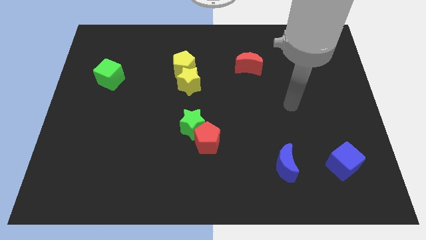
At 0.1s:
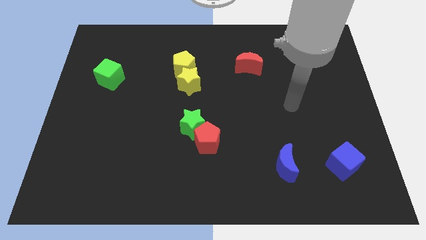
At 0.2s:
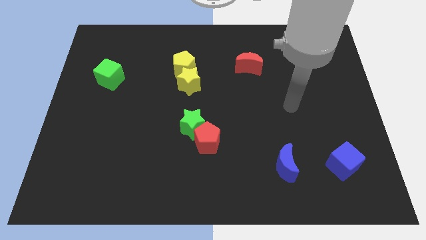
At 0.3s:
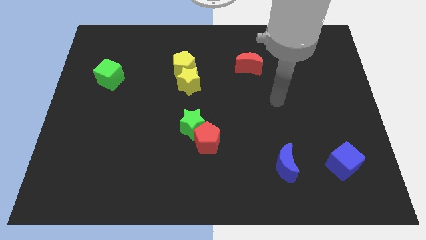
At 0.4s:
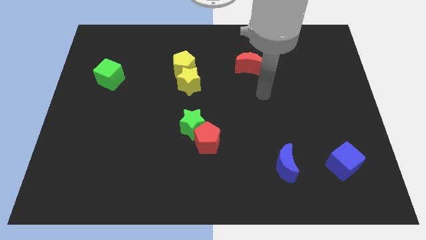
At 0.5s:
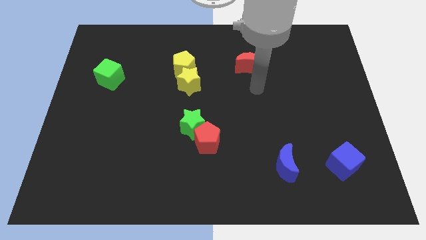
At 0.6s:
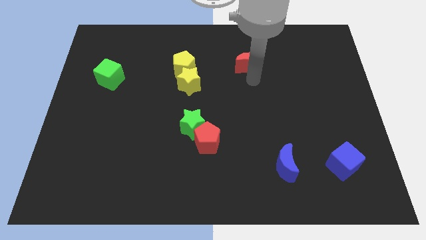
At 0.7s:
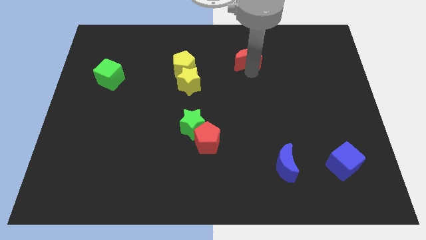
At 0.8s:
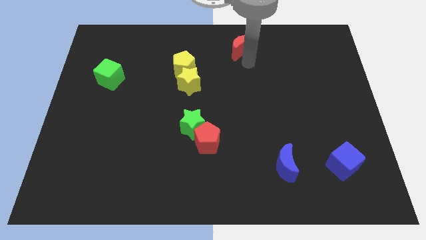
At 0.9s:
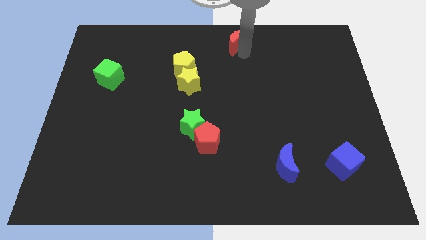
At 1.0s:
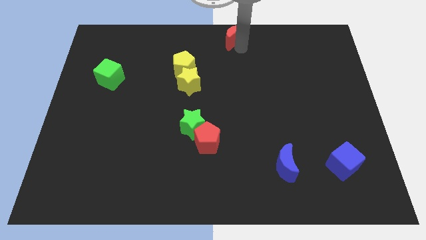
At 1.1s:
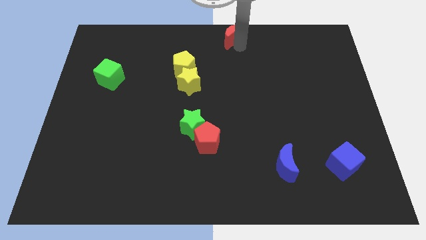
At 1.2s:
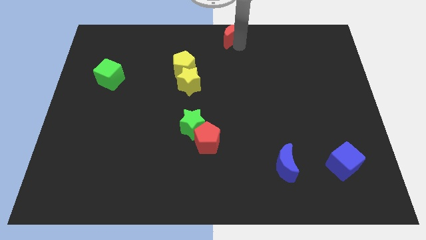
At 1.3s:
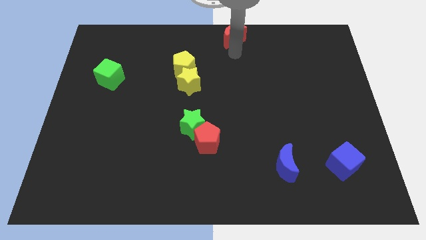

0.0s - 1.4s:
push the red moon towards the top center of the board

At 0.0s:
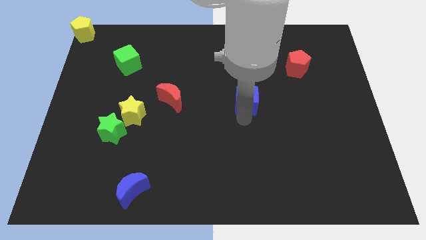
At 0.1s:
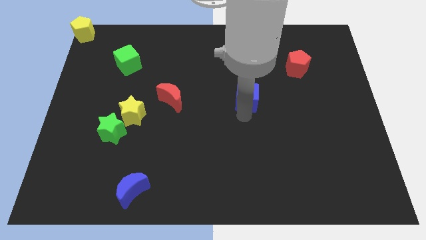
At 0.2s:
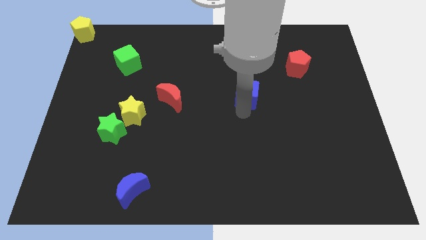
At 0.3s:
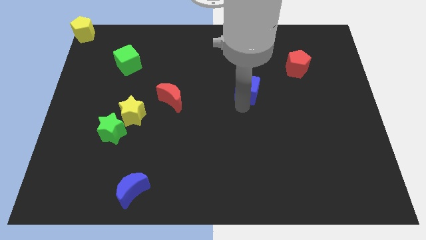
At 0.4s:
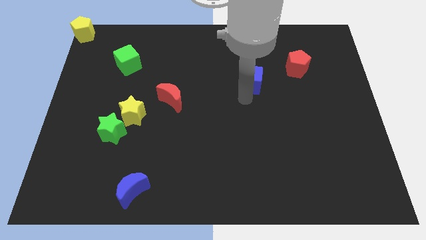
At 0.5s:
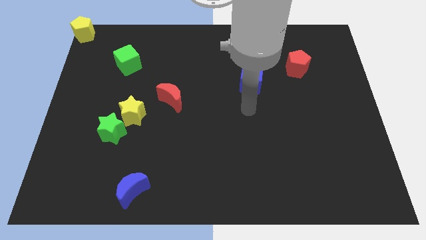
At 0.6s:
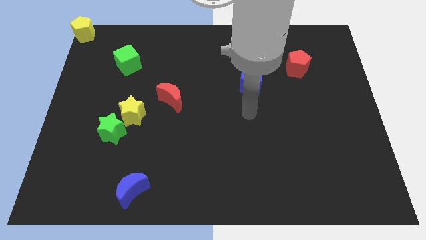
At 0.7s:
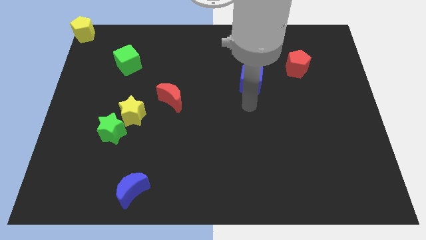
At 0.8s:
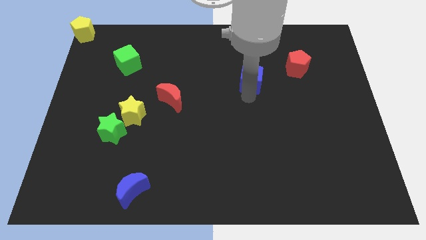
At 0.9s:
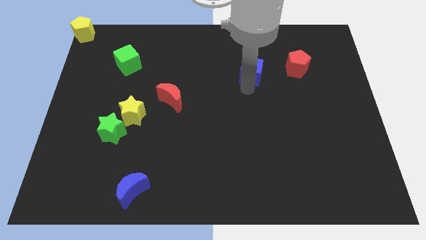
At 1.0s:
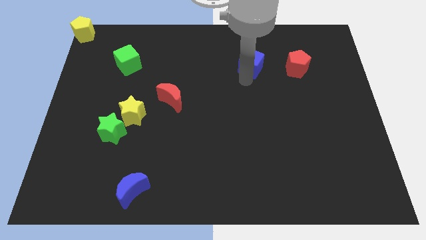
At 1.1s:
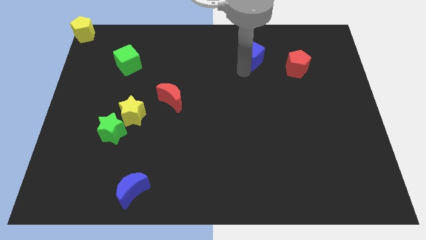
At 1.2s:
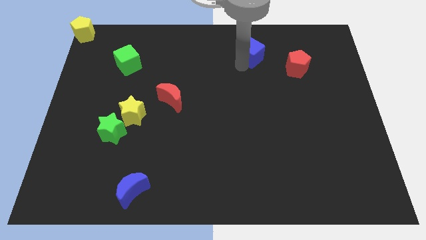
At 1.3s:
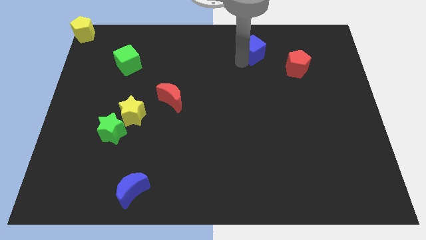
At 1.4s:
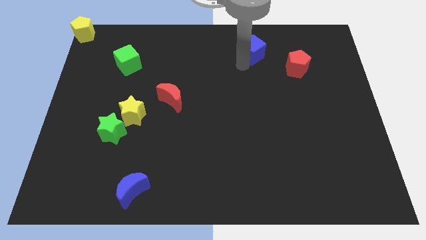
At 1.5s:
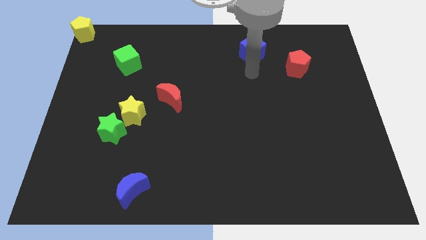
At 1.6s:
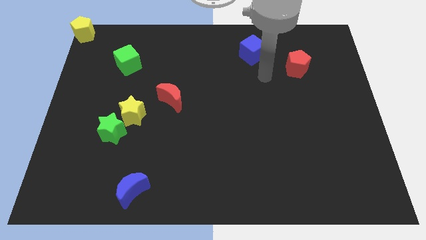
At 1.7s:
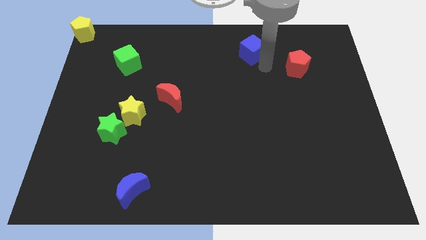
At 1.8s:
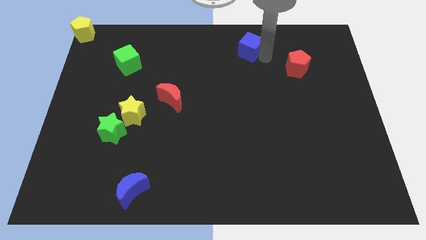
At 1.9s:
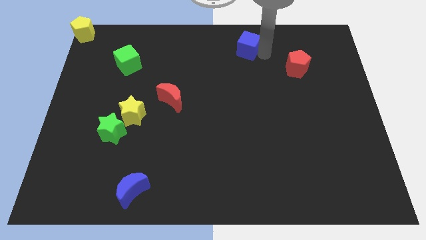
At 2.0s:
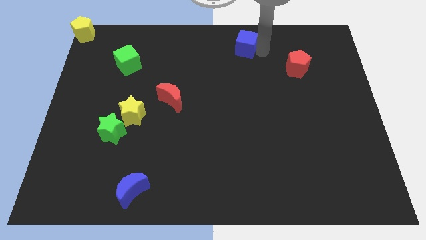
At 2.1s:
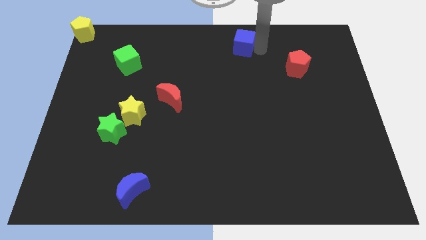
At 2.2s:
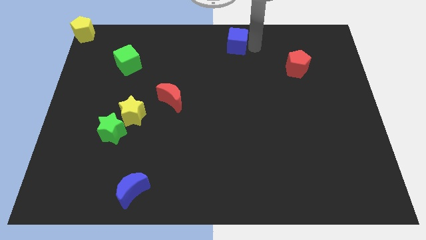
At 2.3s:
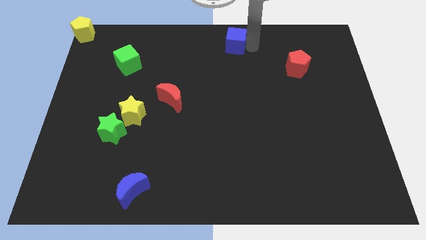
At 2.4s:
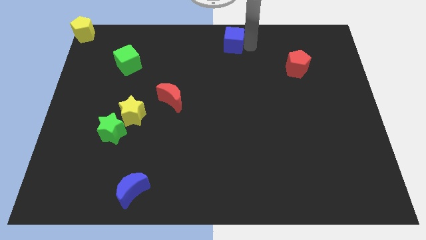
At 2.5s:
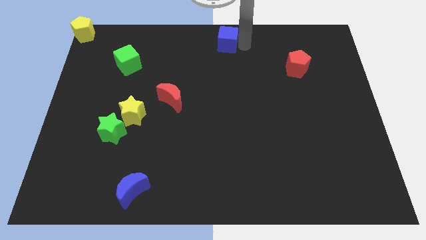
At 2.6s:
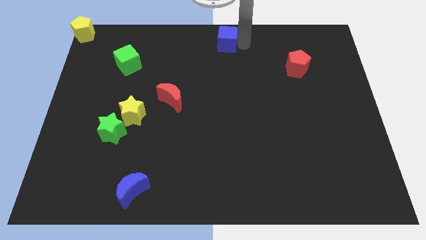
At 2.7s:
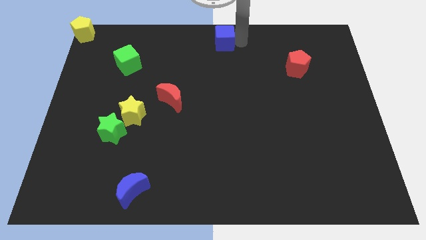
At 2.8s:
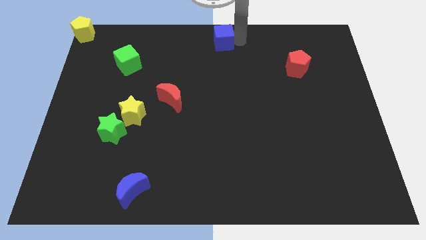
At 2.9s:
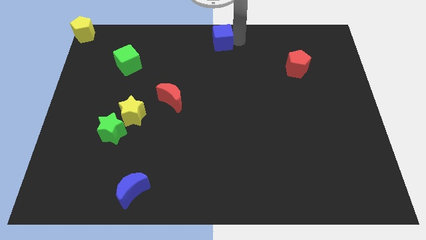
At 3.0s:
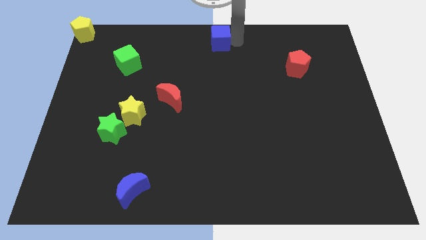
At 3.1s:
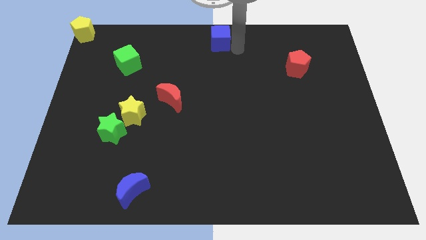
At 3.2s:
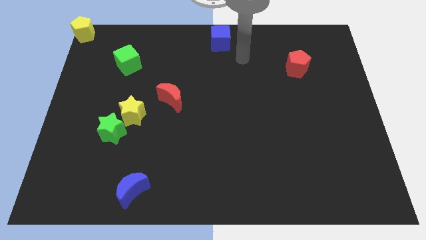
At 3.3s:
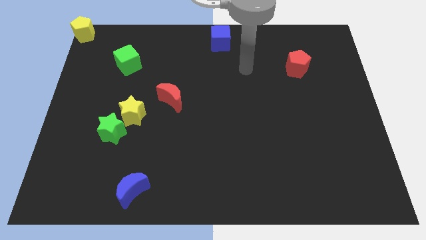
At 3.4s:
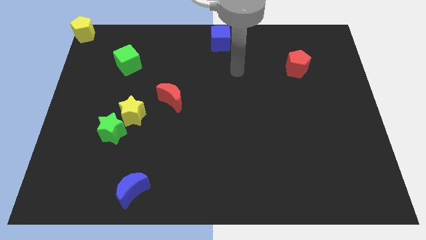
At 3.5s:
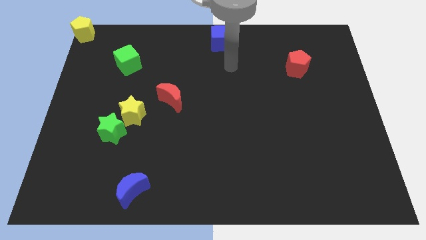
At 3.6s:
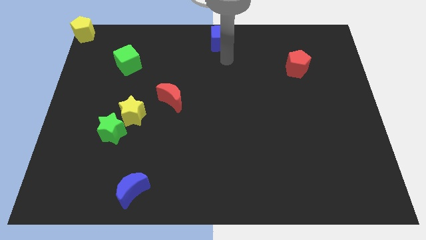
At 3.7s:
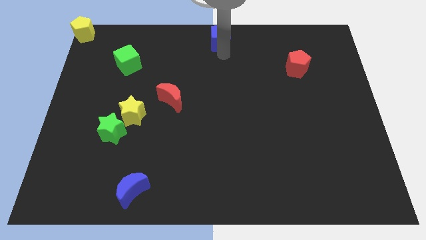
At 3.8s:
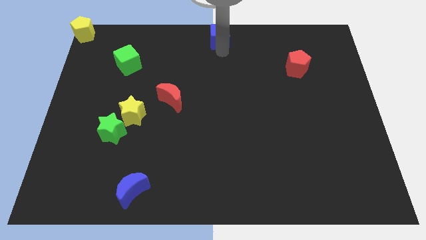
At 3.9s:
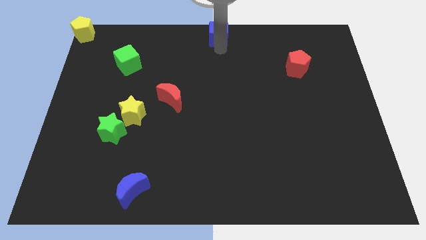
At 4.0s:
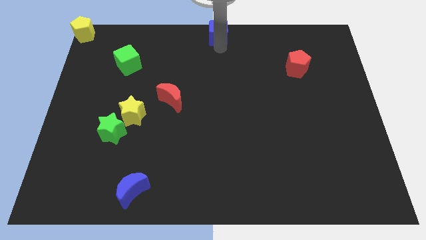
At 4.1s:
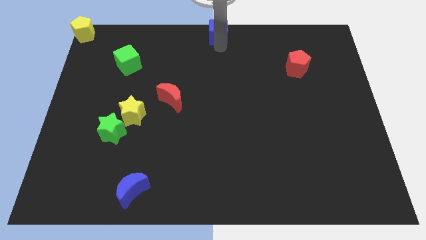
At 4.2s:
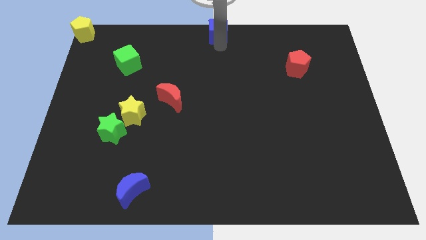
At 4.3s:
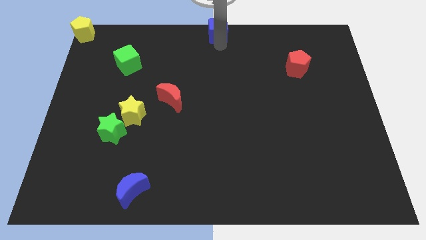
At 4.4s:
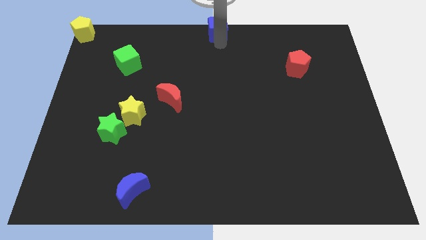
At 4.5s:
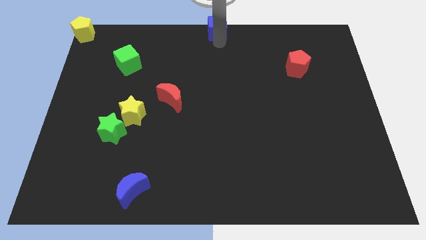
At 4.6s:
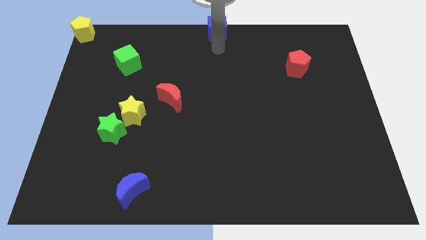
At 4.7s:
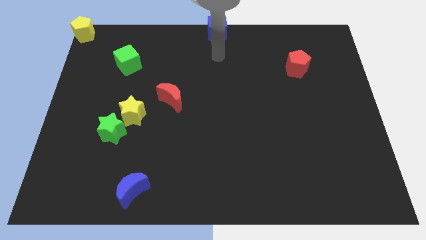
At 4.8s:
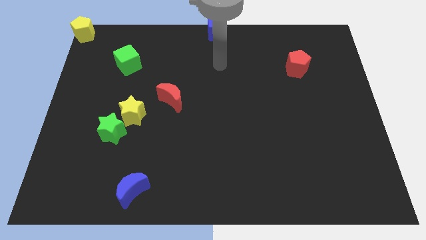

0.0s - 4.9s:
place blue cube on the top center of the board

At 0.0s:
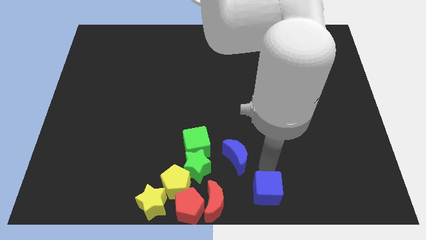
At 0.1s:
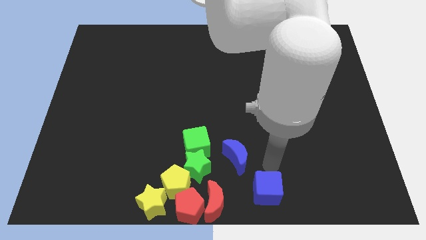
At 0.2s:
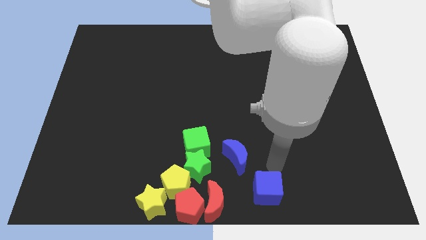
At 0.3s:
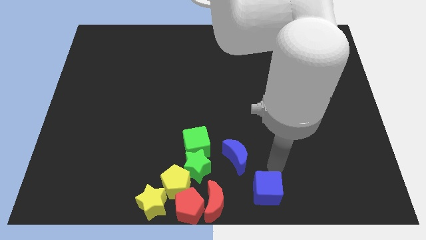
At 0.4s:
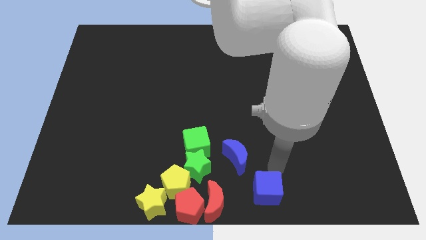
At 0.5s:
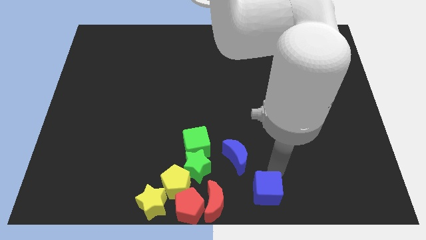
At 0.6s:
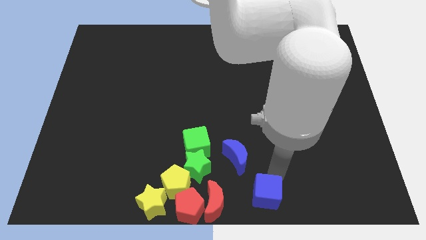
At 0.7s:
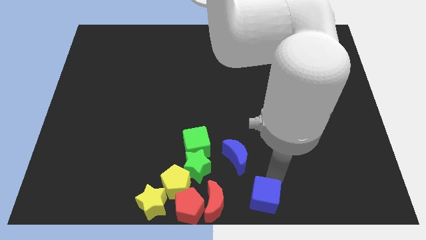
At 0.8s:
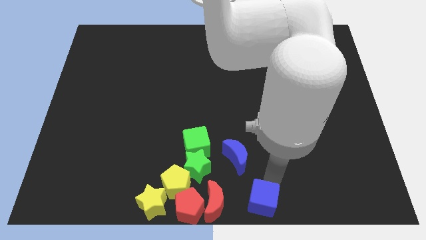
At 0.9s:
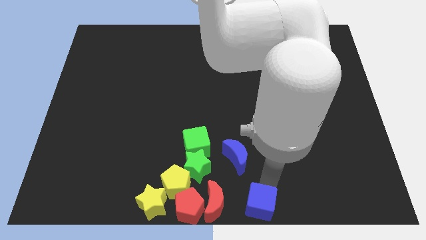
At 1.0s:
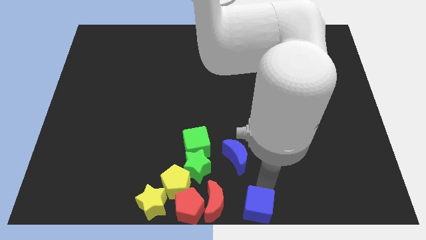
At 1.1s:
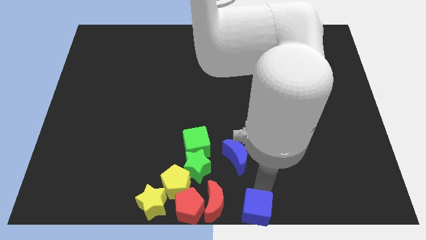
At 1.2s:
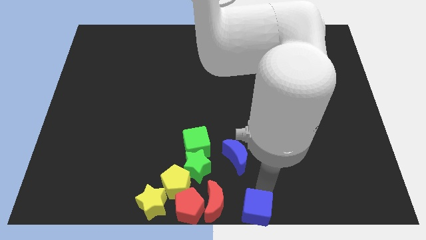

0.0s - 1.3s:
place the blue cube to the right of the group of blocks

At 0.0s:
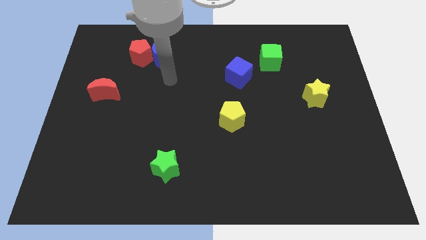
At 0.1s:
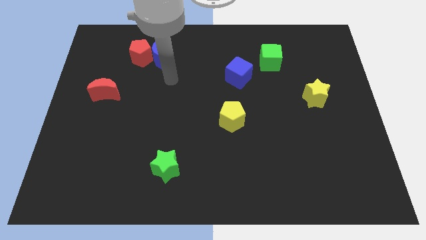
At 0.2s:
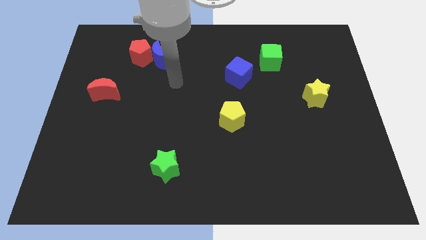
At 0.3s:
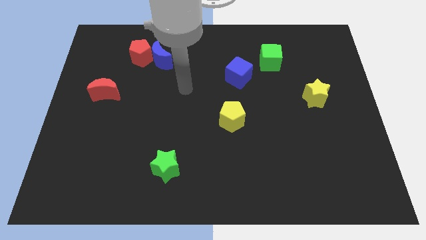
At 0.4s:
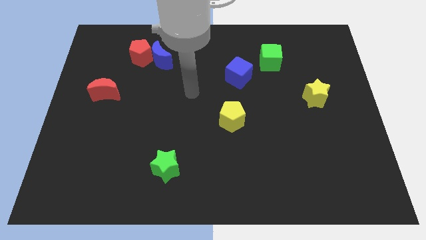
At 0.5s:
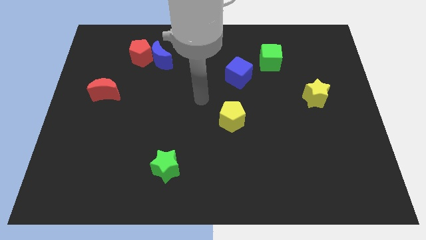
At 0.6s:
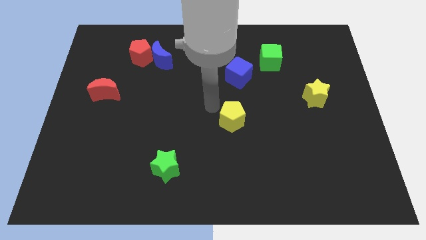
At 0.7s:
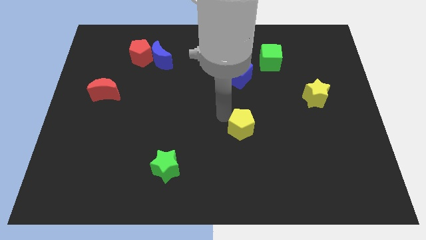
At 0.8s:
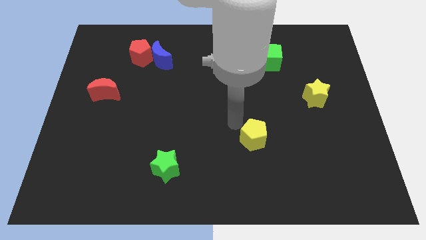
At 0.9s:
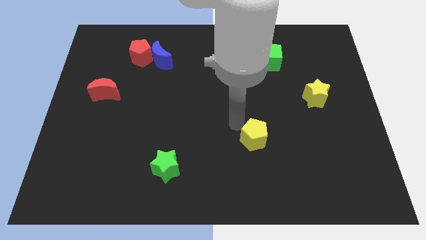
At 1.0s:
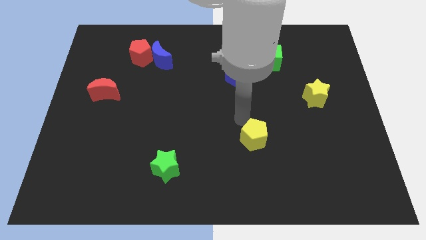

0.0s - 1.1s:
move the yellow pentagon in between the yellow star and green star

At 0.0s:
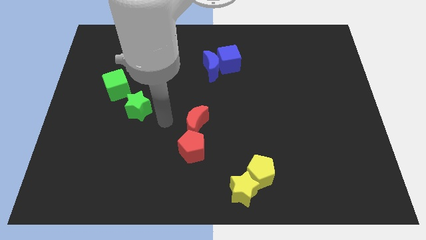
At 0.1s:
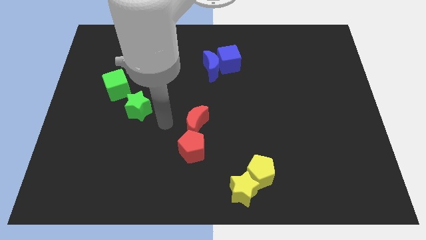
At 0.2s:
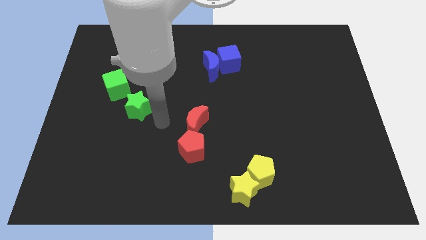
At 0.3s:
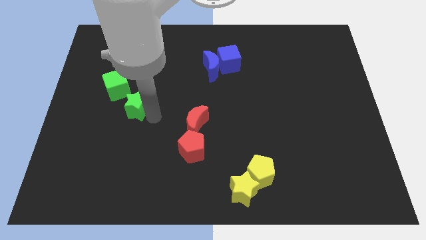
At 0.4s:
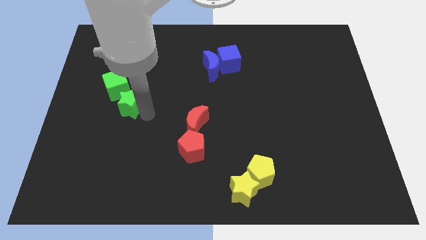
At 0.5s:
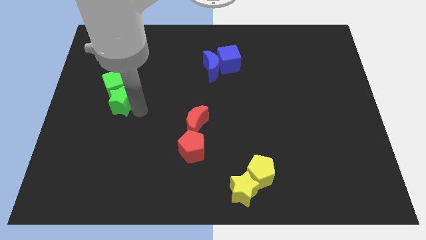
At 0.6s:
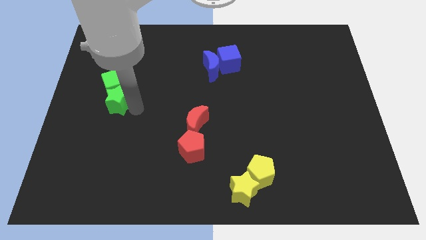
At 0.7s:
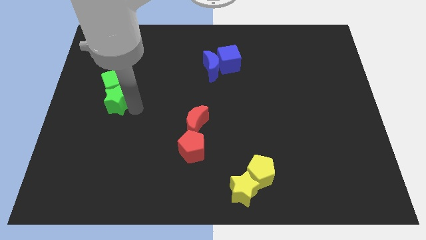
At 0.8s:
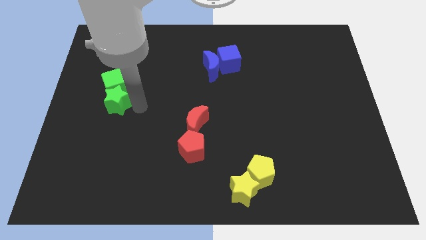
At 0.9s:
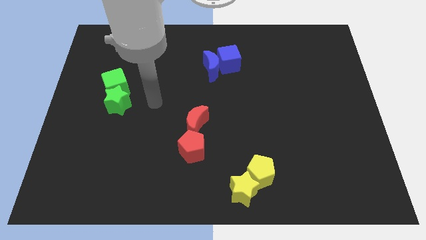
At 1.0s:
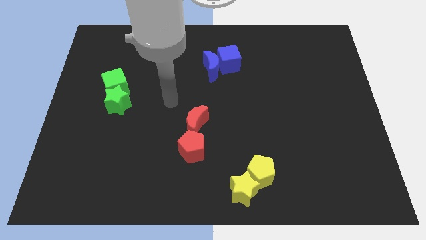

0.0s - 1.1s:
move the green star to the bottom of the green cube
